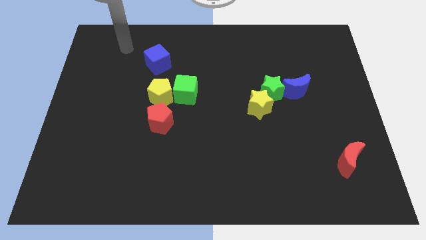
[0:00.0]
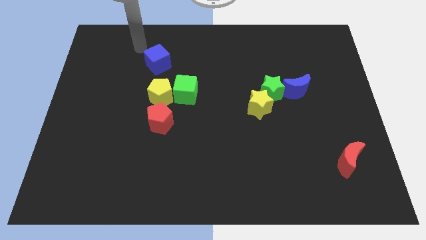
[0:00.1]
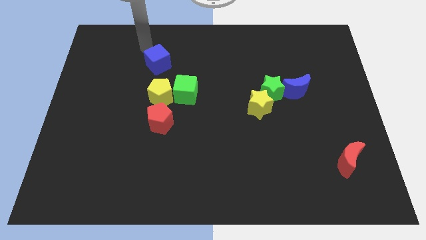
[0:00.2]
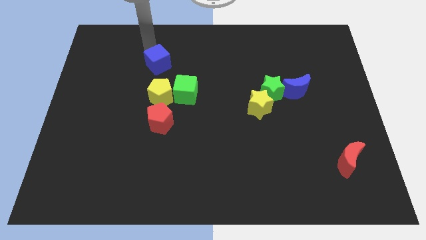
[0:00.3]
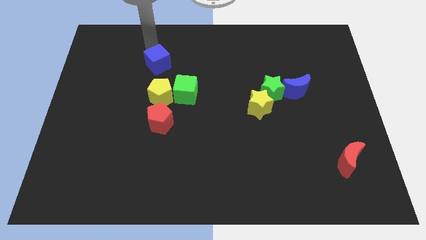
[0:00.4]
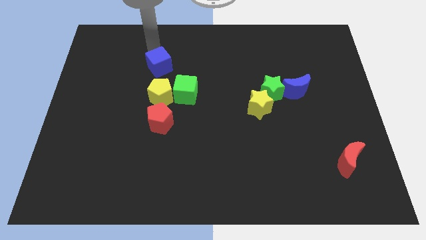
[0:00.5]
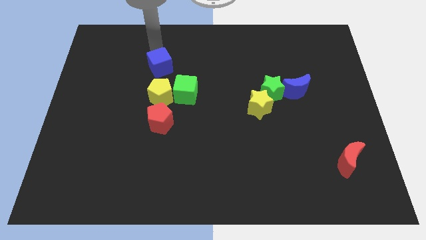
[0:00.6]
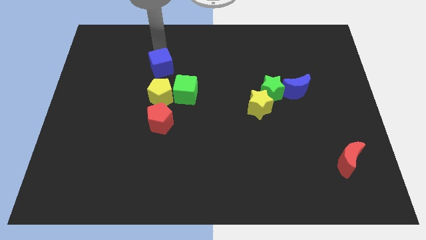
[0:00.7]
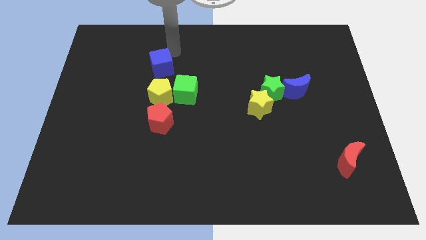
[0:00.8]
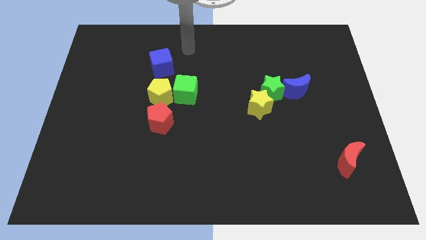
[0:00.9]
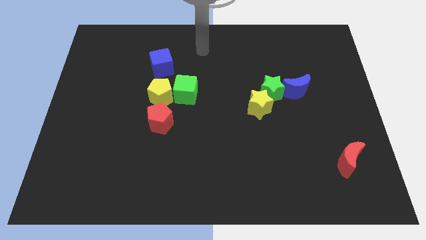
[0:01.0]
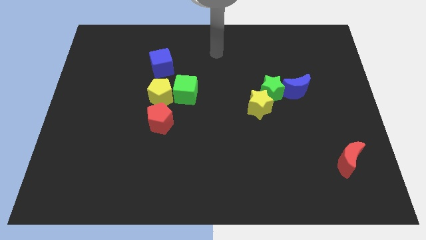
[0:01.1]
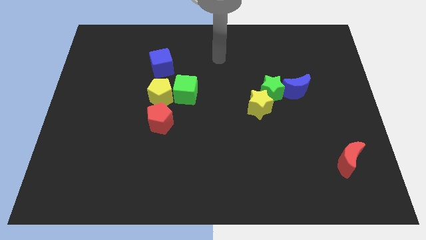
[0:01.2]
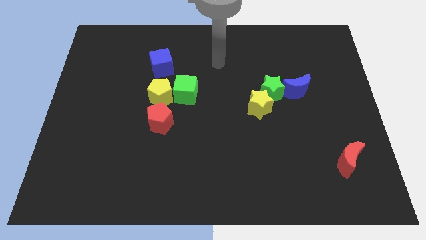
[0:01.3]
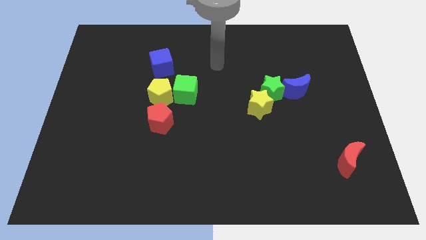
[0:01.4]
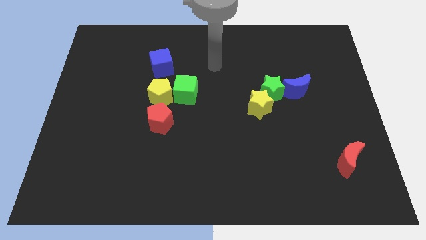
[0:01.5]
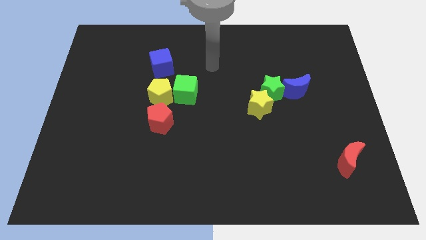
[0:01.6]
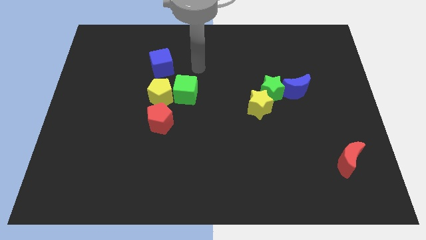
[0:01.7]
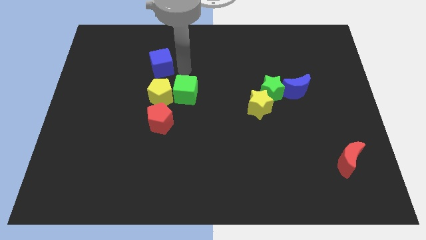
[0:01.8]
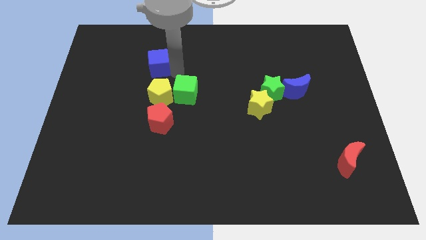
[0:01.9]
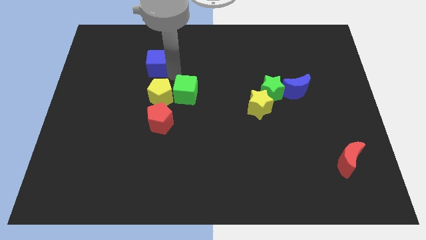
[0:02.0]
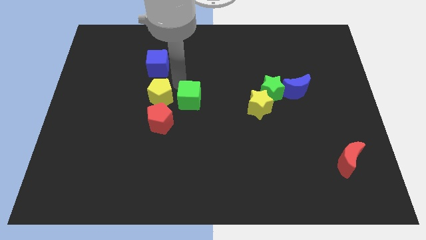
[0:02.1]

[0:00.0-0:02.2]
move the blue cube to the top of the yellow pentagon

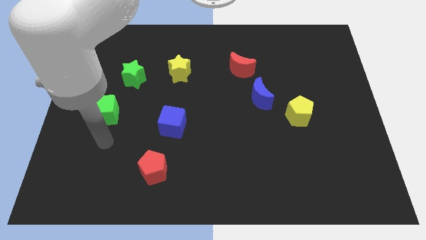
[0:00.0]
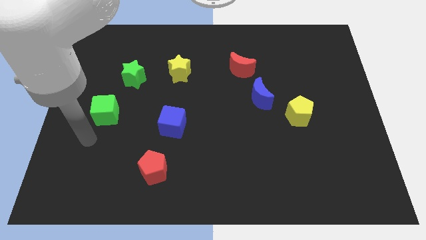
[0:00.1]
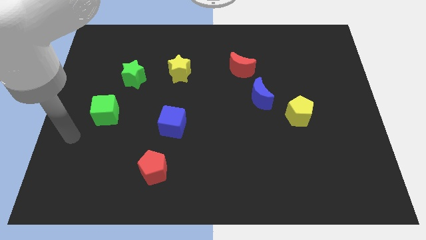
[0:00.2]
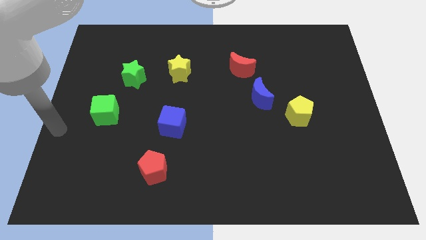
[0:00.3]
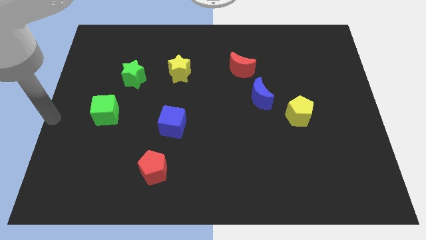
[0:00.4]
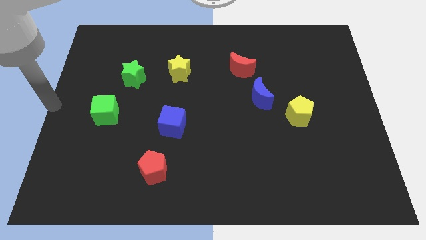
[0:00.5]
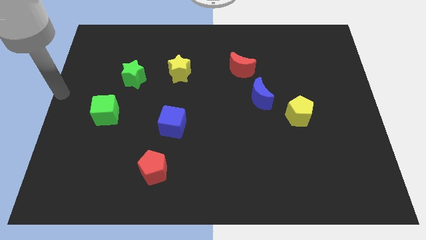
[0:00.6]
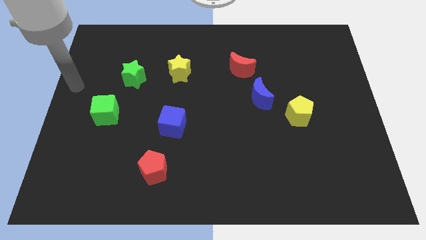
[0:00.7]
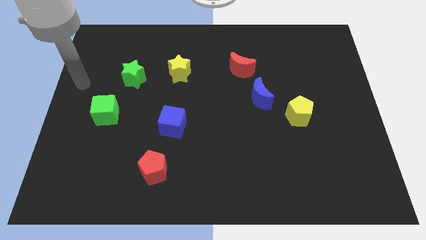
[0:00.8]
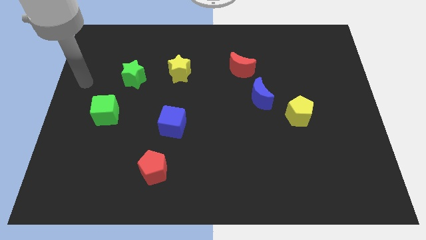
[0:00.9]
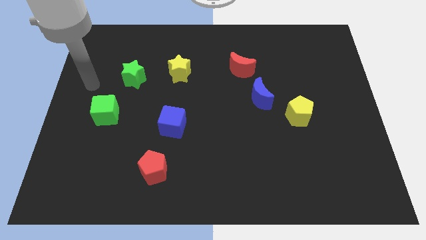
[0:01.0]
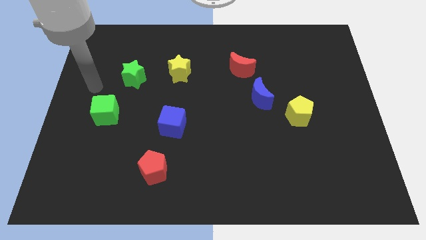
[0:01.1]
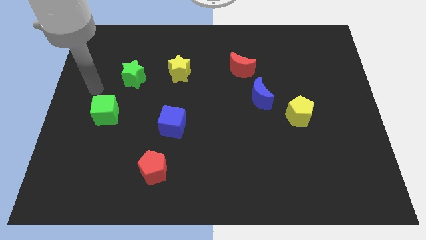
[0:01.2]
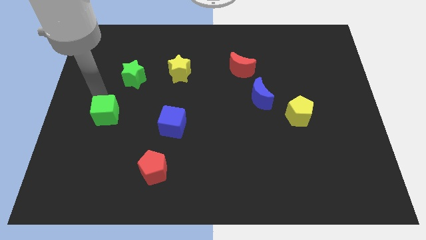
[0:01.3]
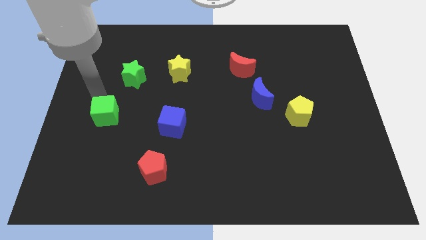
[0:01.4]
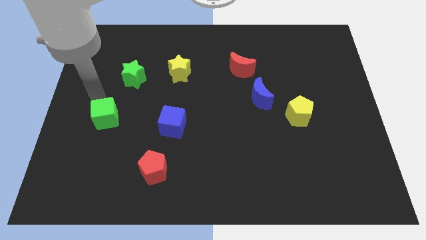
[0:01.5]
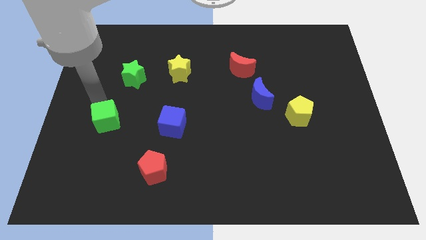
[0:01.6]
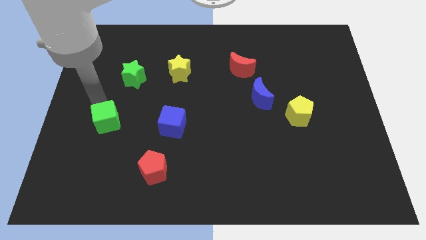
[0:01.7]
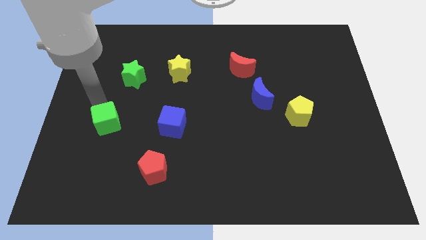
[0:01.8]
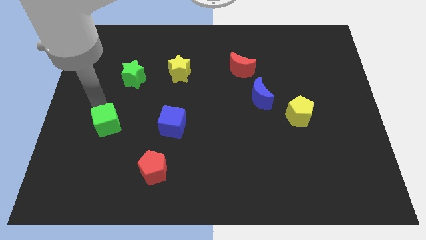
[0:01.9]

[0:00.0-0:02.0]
slightly push the green cube downwards

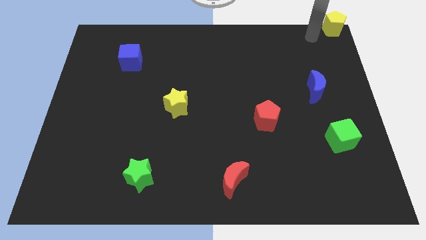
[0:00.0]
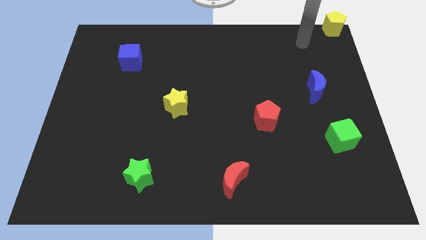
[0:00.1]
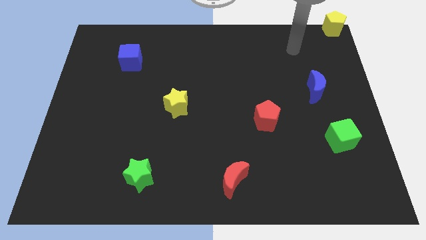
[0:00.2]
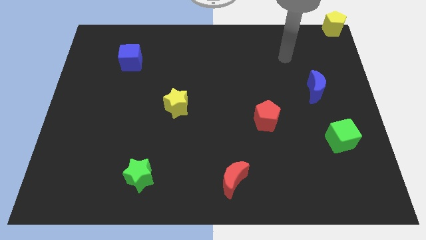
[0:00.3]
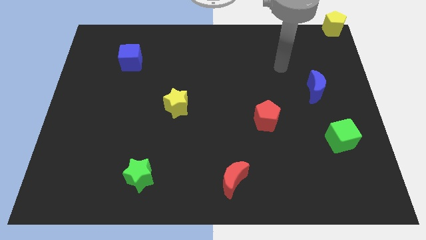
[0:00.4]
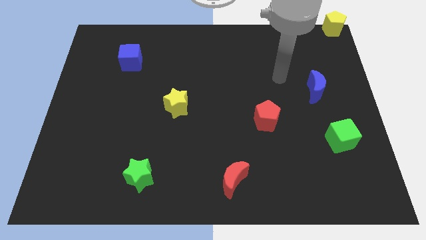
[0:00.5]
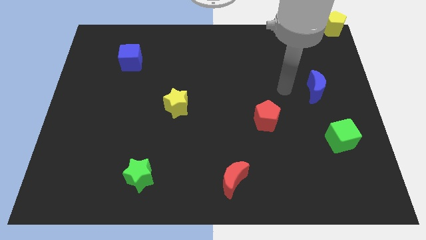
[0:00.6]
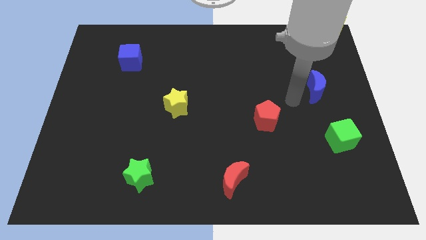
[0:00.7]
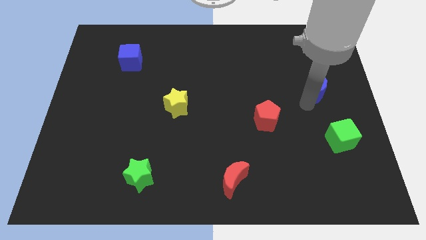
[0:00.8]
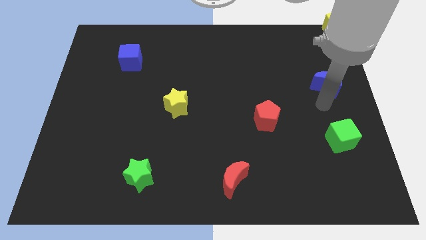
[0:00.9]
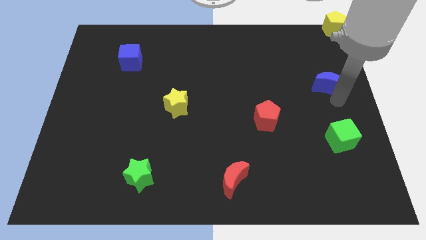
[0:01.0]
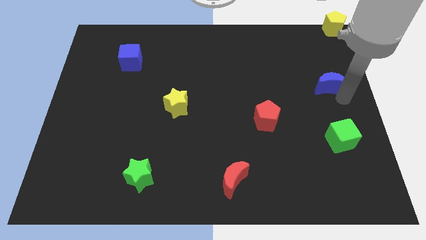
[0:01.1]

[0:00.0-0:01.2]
tap the blue crescent

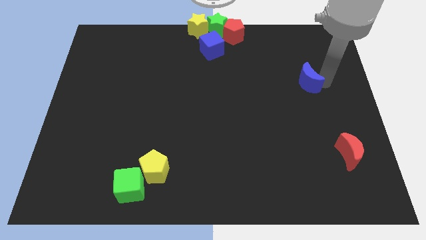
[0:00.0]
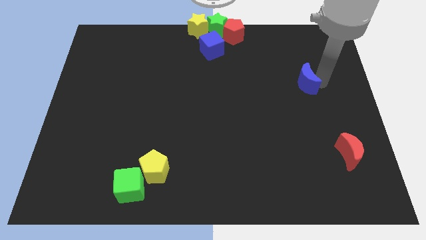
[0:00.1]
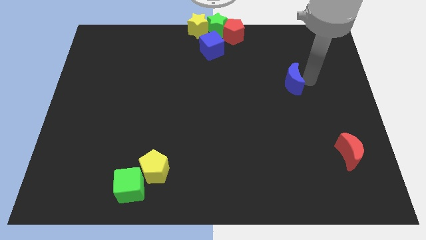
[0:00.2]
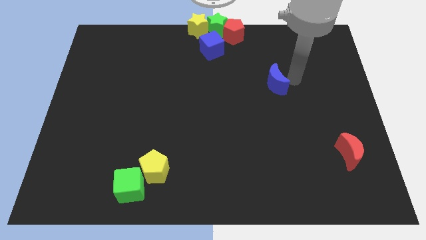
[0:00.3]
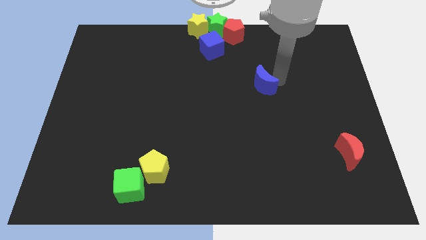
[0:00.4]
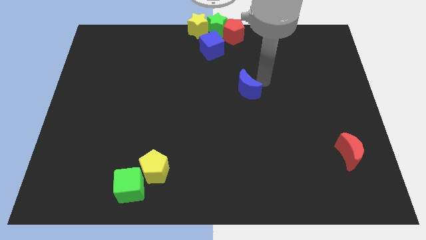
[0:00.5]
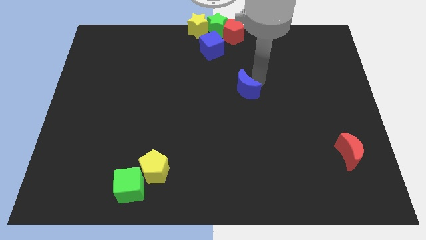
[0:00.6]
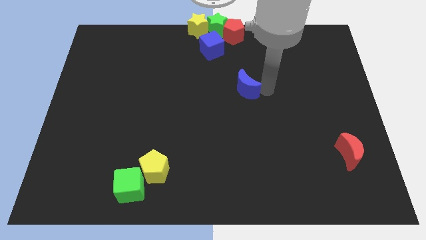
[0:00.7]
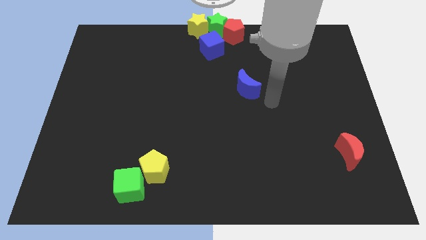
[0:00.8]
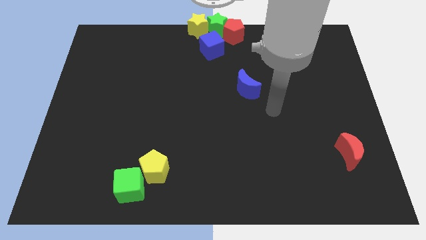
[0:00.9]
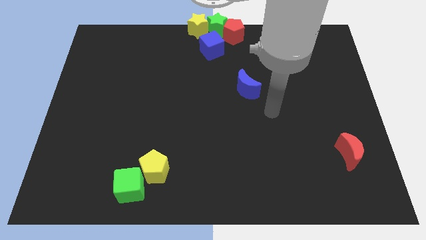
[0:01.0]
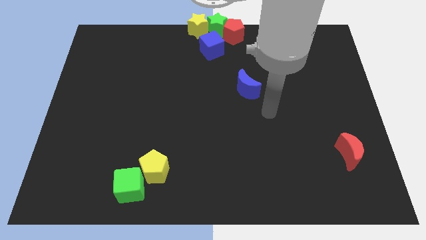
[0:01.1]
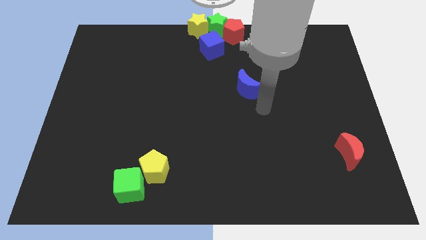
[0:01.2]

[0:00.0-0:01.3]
place the blue moon vertically below the red pentagon

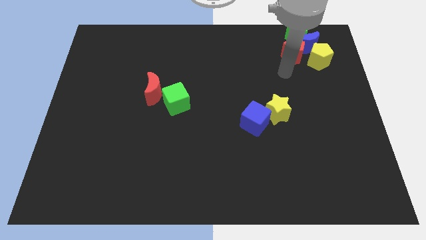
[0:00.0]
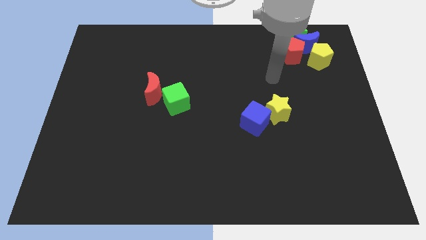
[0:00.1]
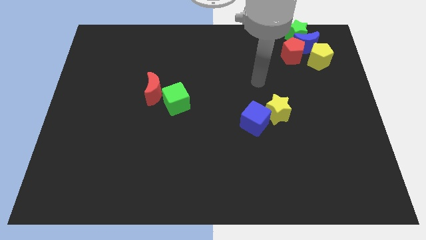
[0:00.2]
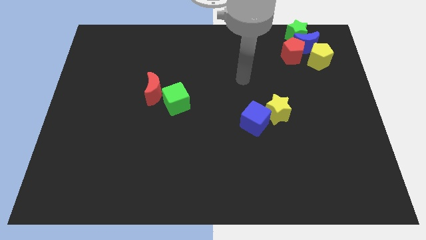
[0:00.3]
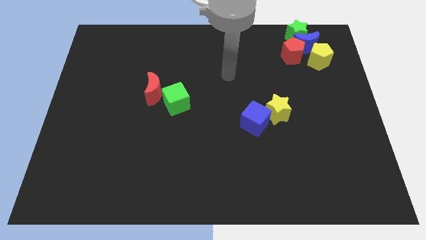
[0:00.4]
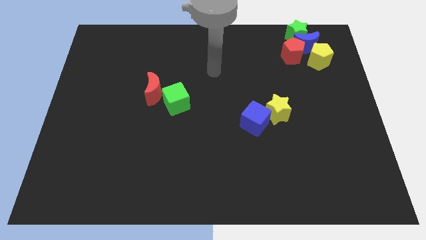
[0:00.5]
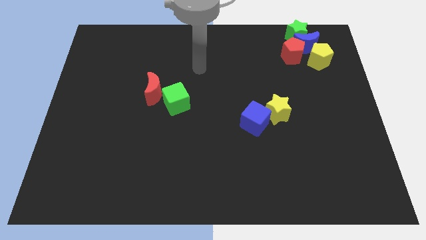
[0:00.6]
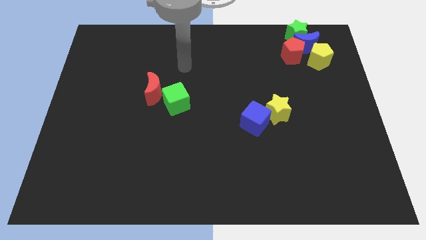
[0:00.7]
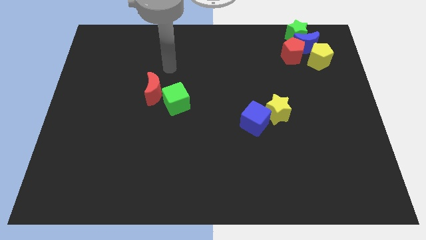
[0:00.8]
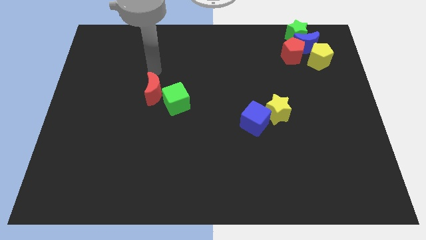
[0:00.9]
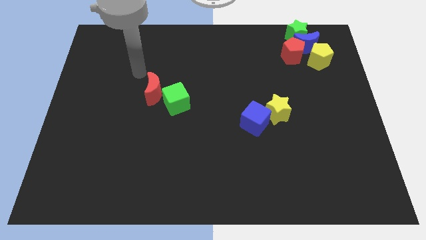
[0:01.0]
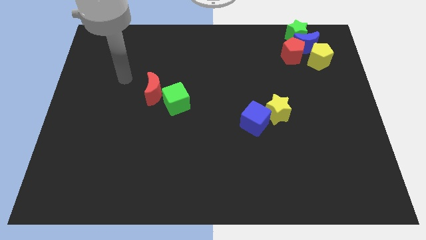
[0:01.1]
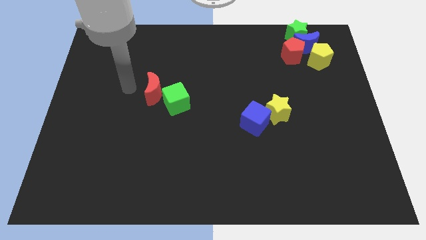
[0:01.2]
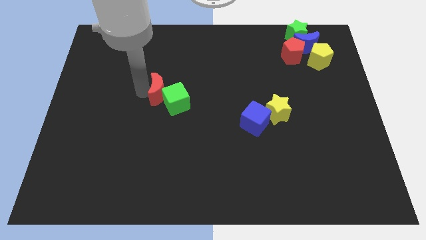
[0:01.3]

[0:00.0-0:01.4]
move the arm left to the red crescent

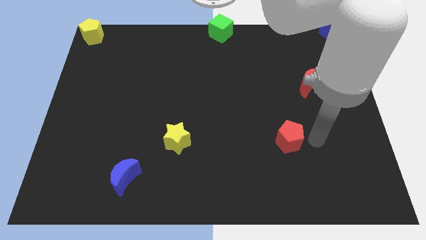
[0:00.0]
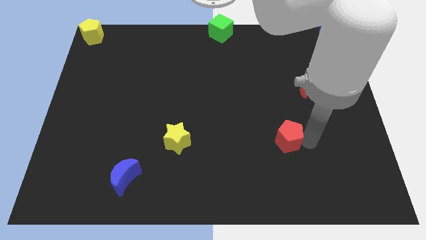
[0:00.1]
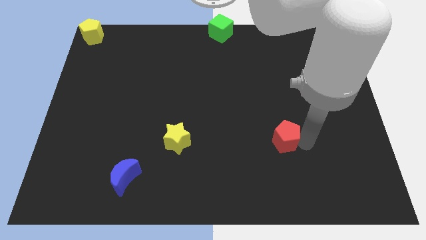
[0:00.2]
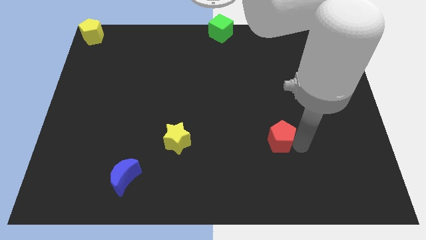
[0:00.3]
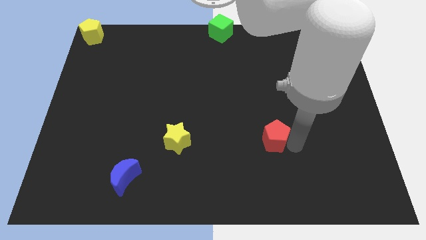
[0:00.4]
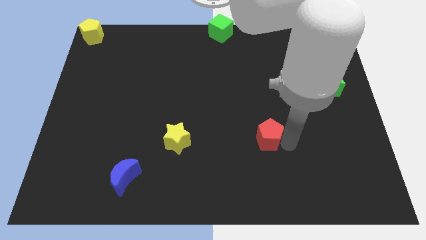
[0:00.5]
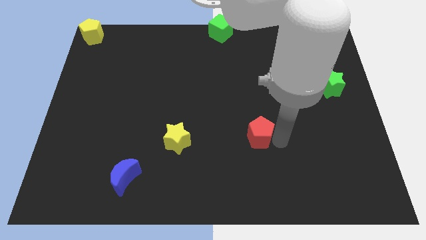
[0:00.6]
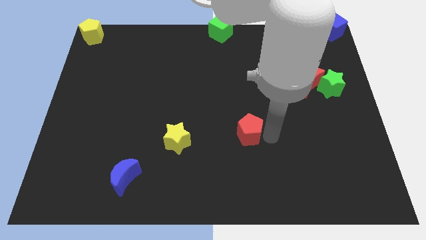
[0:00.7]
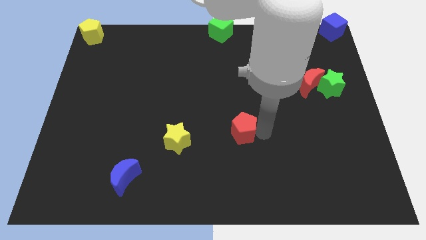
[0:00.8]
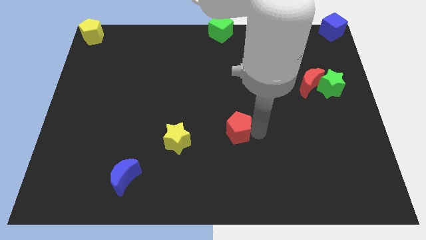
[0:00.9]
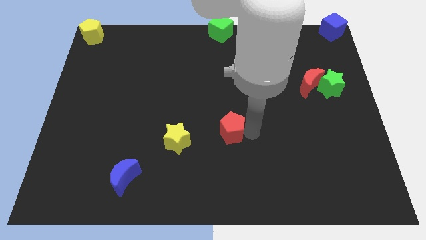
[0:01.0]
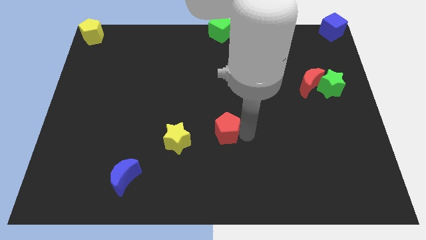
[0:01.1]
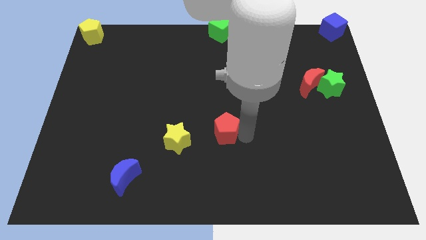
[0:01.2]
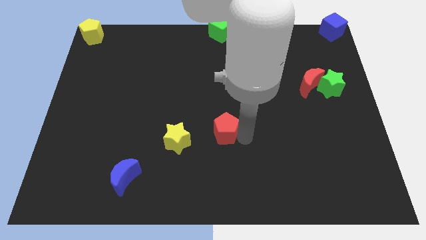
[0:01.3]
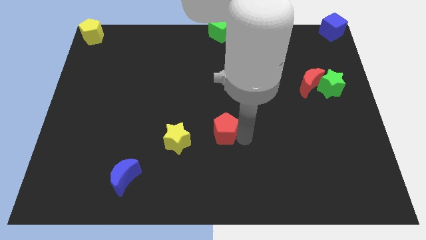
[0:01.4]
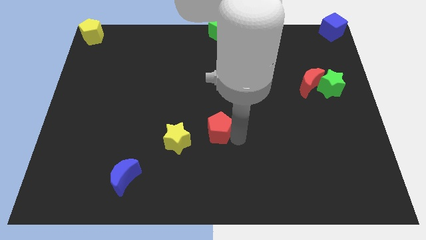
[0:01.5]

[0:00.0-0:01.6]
push red pentagon below green cube
